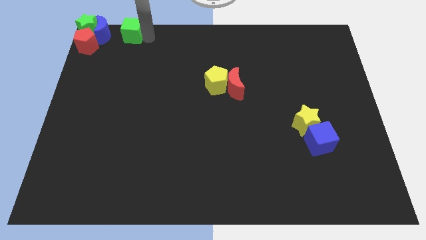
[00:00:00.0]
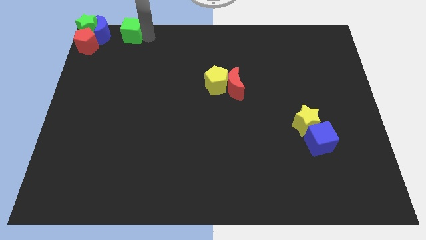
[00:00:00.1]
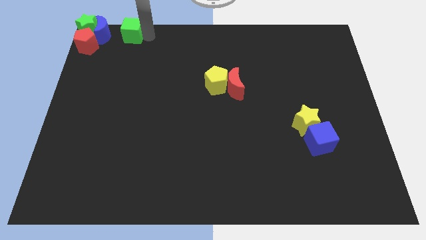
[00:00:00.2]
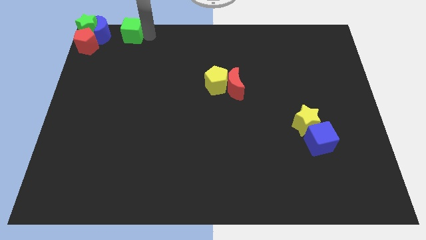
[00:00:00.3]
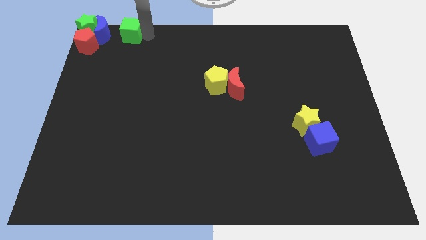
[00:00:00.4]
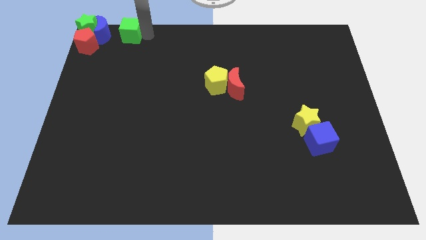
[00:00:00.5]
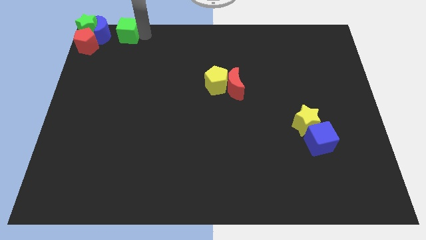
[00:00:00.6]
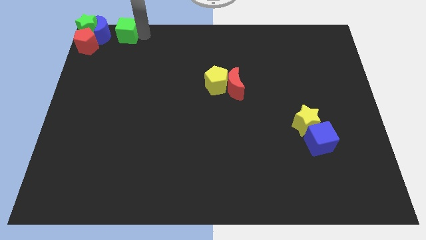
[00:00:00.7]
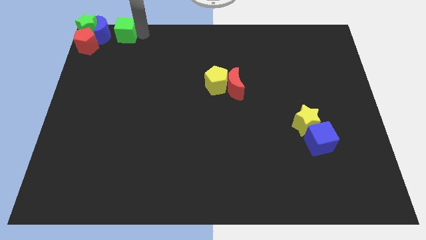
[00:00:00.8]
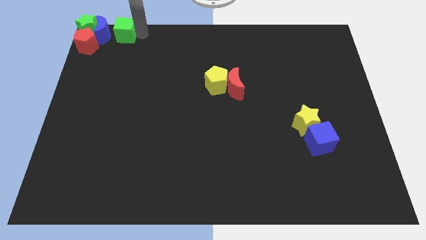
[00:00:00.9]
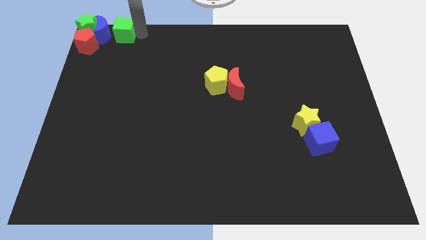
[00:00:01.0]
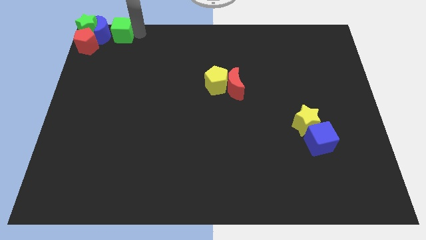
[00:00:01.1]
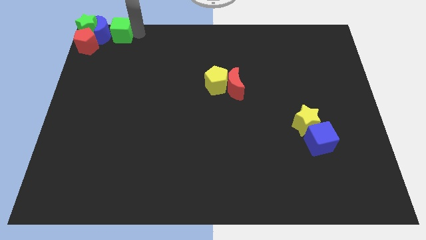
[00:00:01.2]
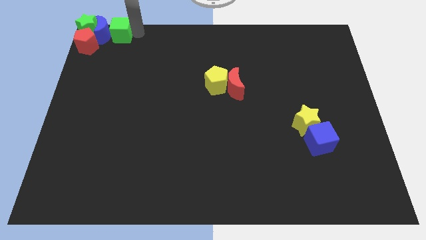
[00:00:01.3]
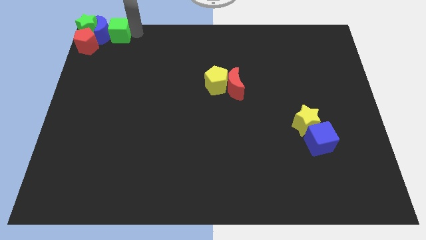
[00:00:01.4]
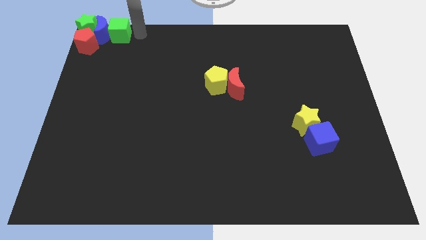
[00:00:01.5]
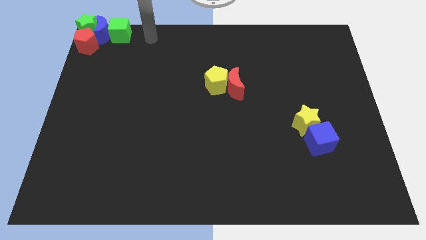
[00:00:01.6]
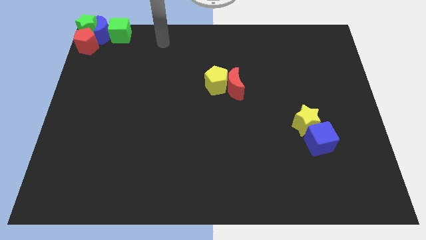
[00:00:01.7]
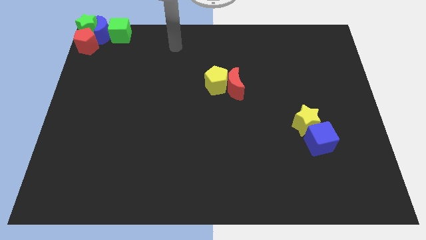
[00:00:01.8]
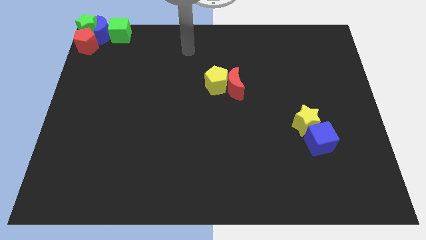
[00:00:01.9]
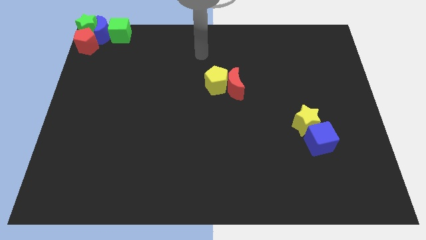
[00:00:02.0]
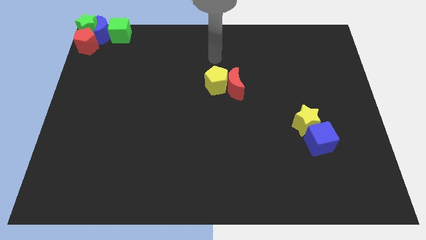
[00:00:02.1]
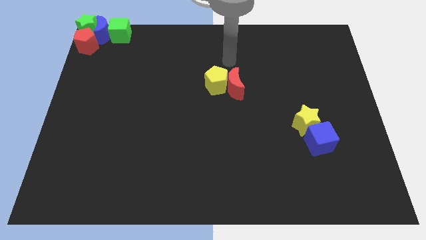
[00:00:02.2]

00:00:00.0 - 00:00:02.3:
push the green cube to the right of the blue crescent

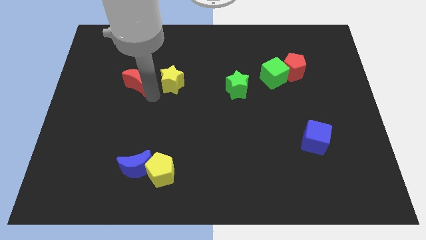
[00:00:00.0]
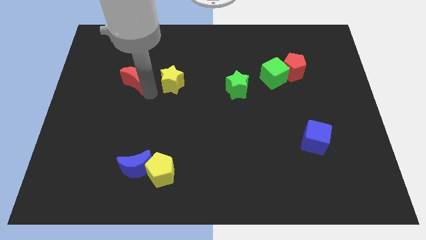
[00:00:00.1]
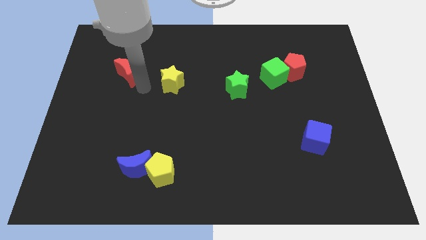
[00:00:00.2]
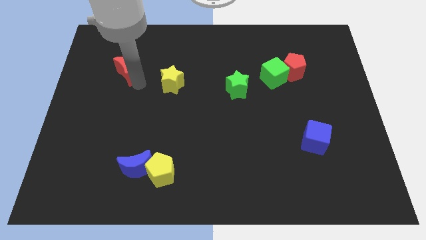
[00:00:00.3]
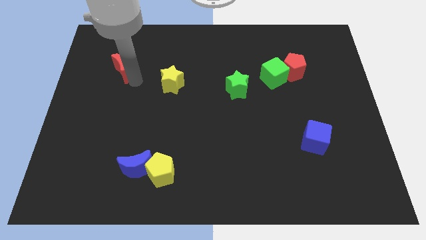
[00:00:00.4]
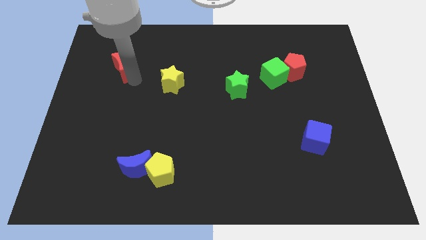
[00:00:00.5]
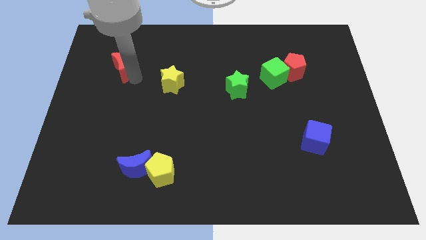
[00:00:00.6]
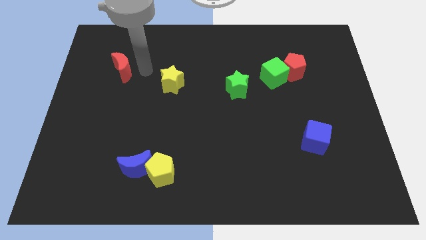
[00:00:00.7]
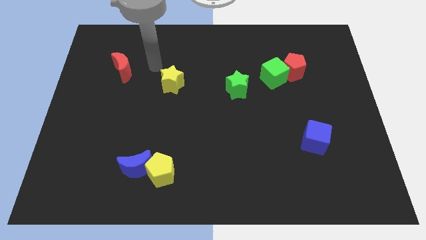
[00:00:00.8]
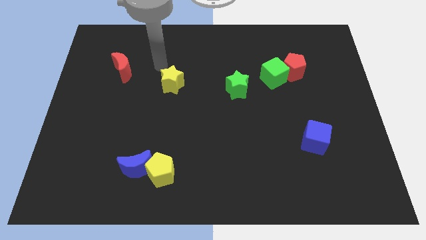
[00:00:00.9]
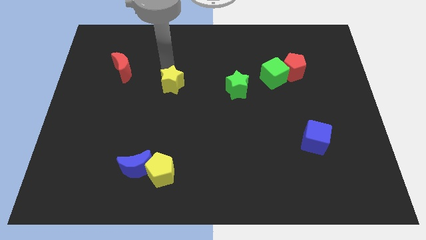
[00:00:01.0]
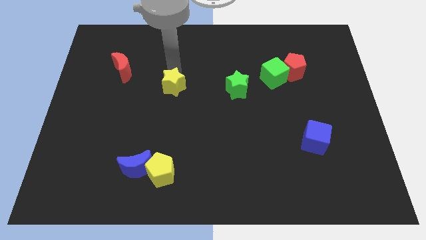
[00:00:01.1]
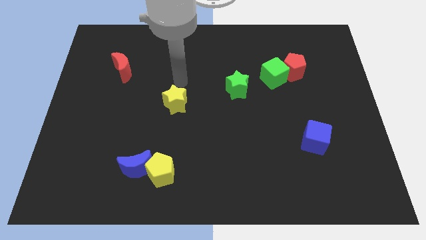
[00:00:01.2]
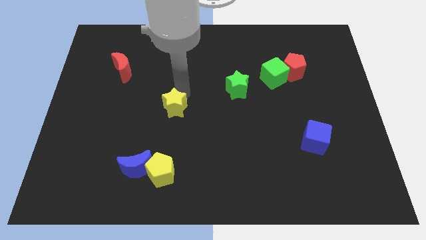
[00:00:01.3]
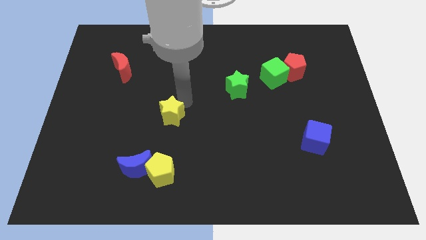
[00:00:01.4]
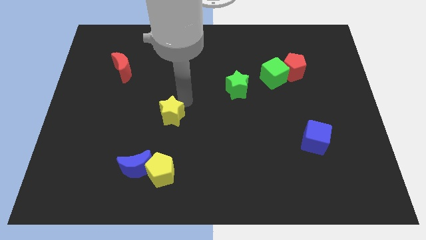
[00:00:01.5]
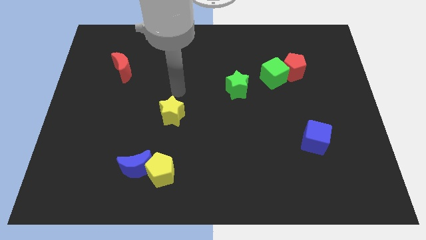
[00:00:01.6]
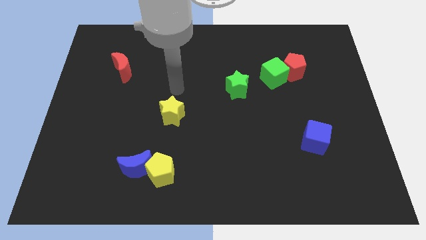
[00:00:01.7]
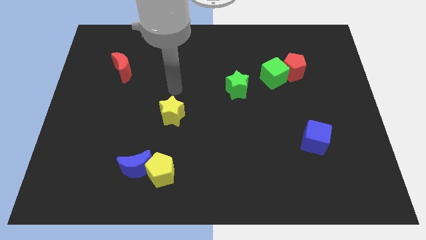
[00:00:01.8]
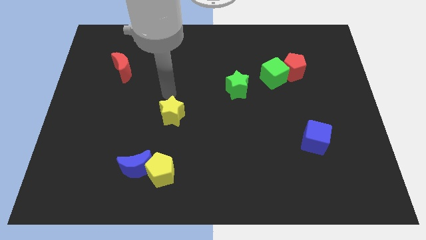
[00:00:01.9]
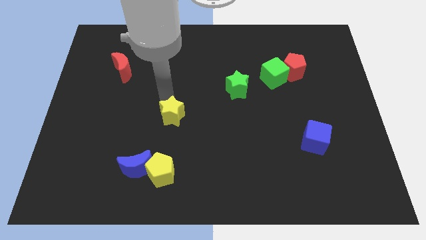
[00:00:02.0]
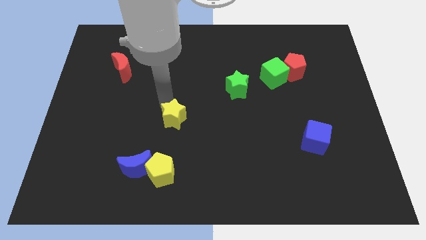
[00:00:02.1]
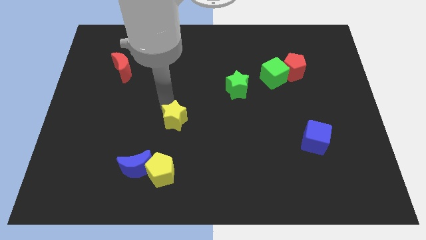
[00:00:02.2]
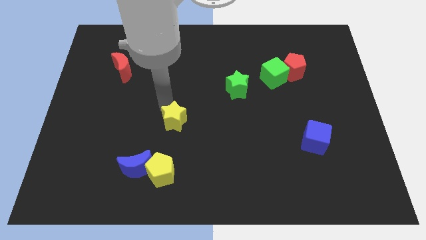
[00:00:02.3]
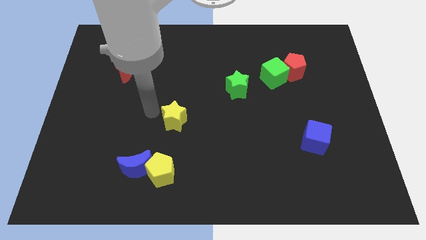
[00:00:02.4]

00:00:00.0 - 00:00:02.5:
separate yellow star and red crescent

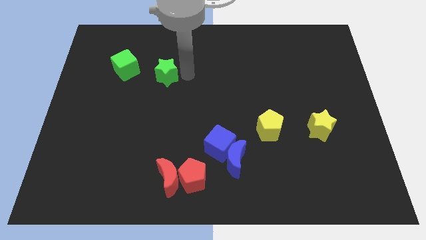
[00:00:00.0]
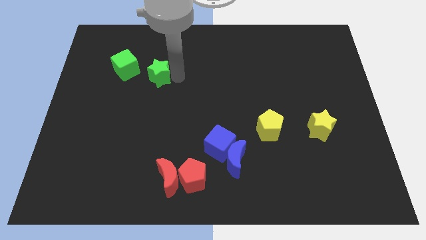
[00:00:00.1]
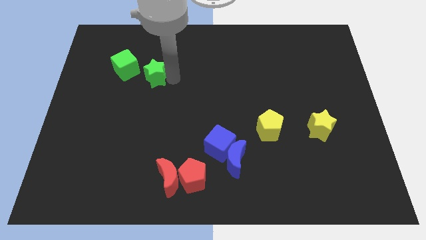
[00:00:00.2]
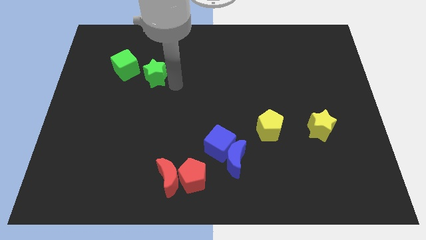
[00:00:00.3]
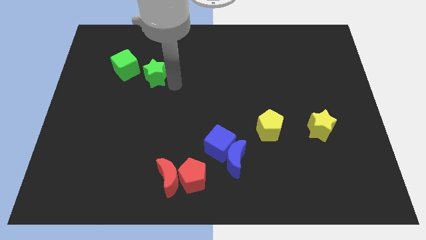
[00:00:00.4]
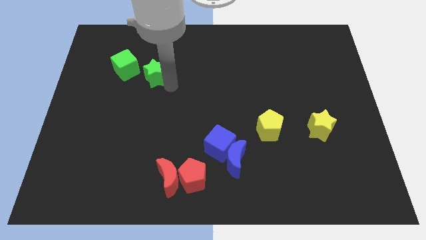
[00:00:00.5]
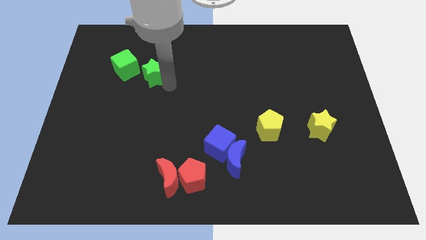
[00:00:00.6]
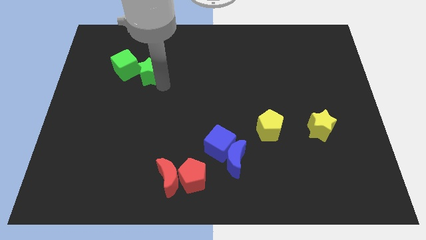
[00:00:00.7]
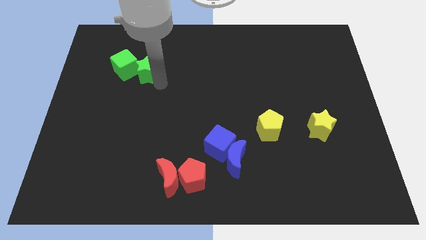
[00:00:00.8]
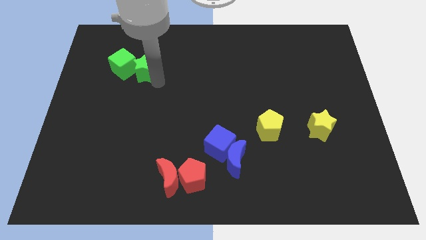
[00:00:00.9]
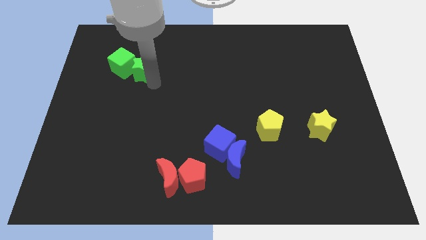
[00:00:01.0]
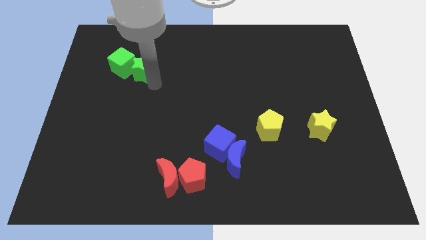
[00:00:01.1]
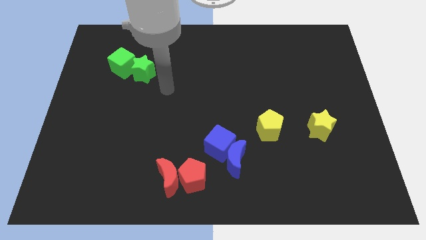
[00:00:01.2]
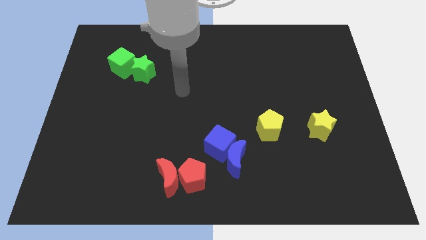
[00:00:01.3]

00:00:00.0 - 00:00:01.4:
move the green star close to the green cube

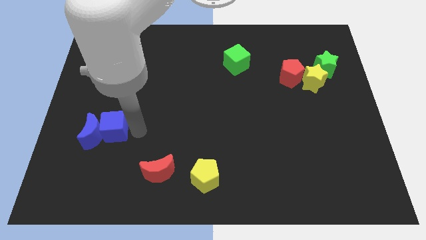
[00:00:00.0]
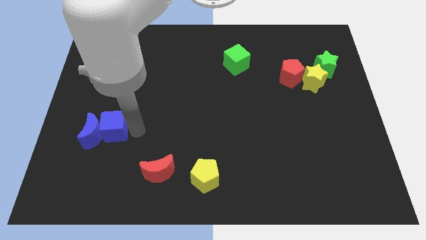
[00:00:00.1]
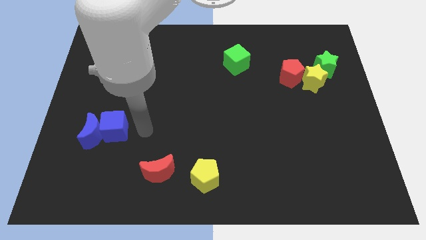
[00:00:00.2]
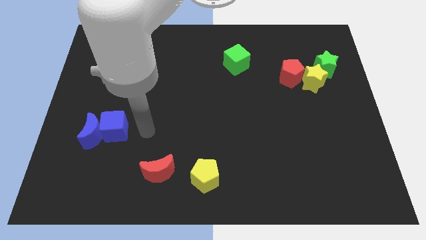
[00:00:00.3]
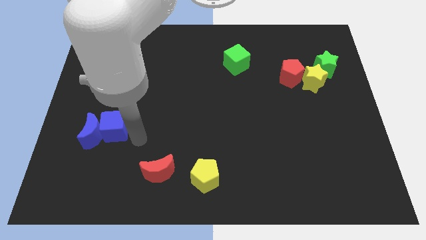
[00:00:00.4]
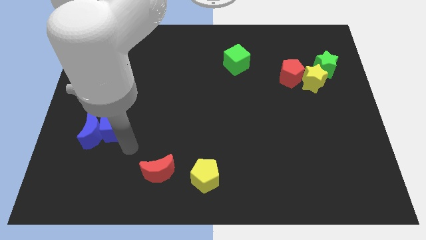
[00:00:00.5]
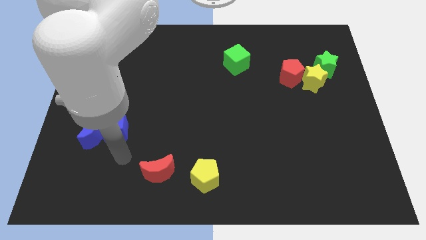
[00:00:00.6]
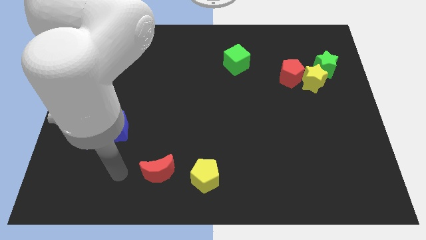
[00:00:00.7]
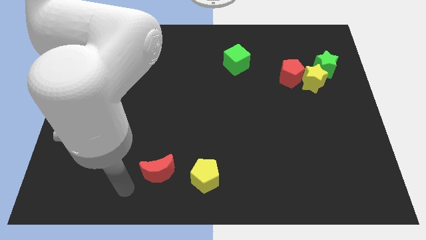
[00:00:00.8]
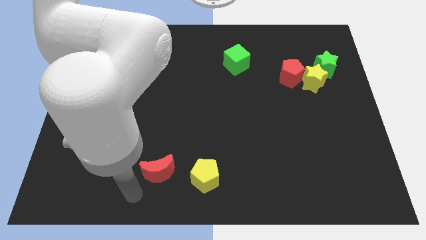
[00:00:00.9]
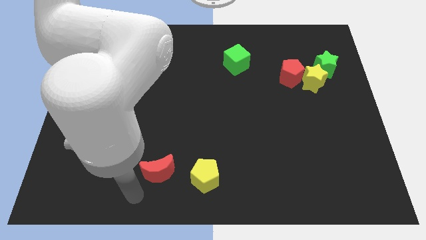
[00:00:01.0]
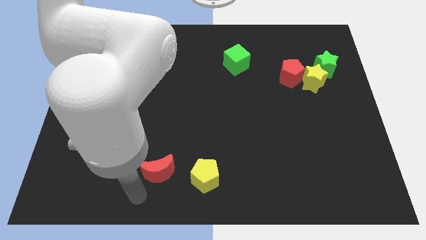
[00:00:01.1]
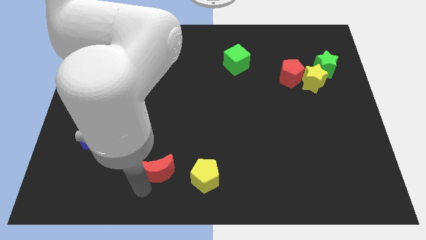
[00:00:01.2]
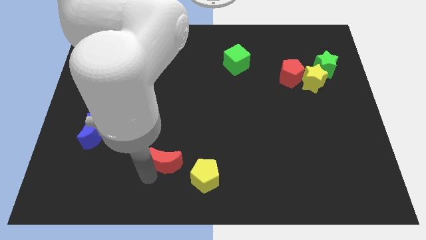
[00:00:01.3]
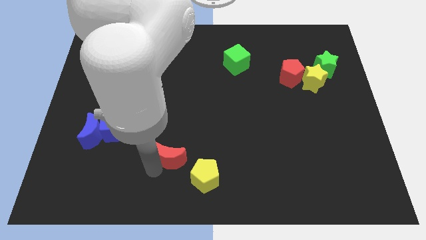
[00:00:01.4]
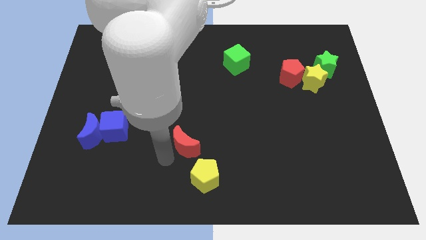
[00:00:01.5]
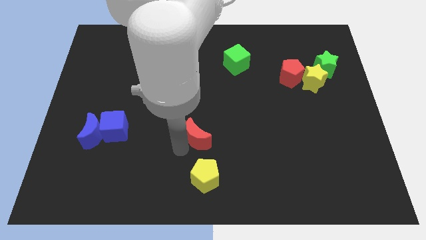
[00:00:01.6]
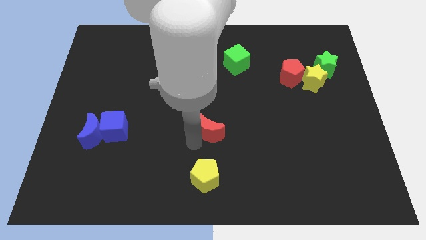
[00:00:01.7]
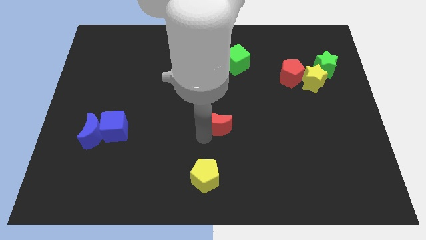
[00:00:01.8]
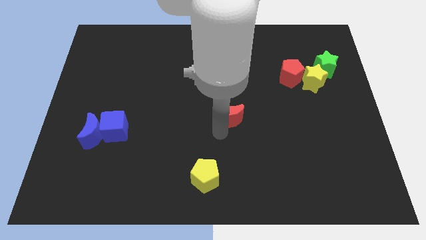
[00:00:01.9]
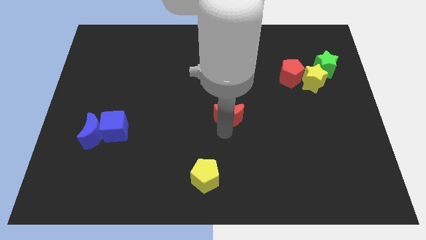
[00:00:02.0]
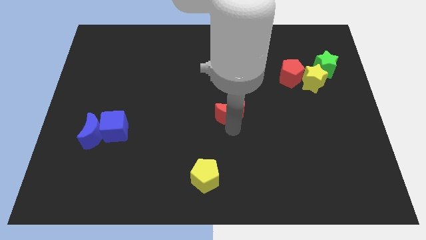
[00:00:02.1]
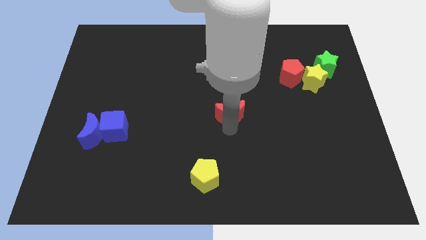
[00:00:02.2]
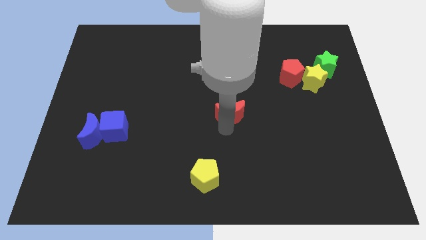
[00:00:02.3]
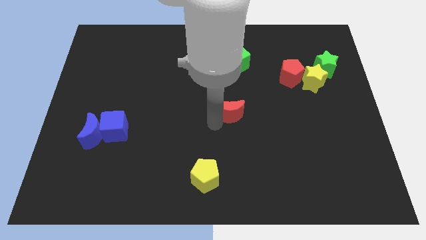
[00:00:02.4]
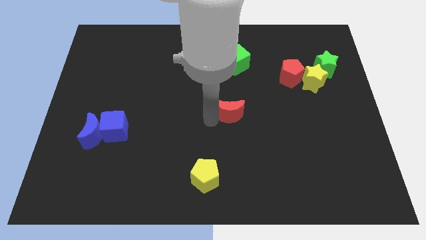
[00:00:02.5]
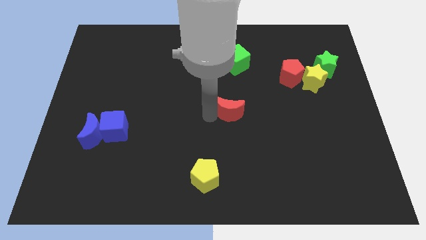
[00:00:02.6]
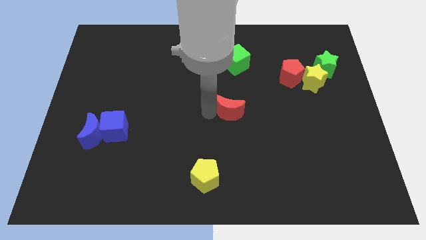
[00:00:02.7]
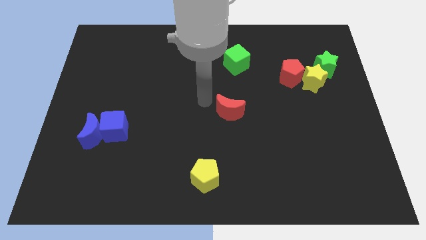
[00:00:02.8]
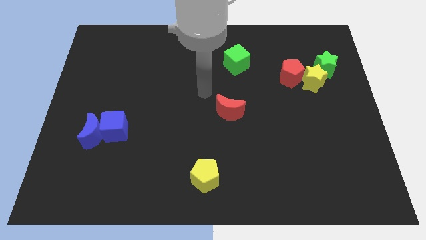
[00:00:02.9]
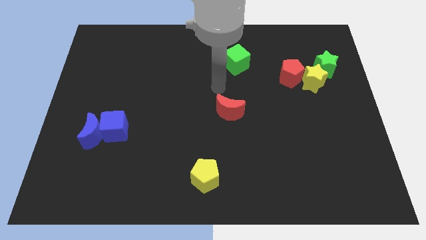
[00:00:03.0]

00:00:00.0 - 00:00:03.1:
place the red crescent at the bottom of the green cube vertically
